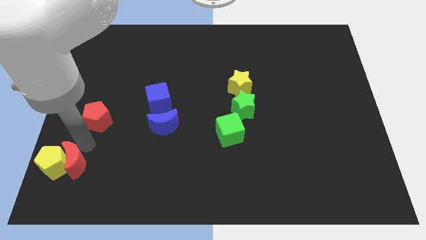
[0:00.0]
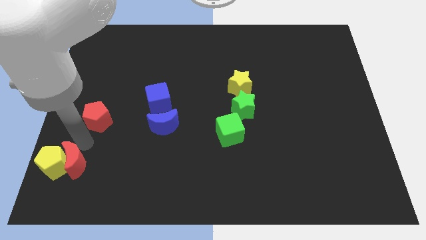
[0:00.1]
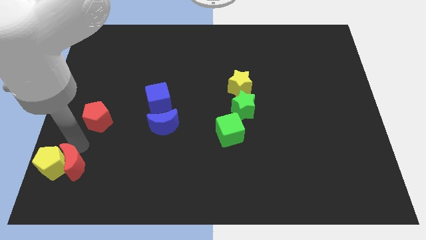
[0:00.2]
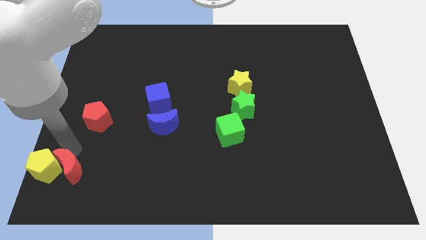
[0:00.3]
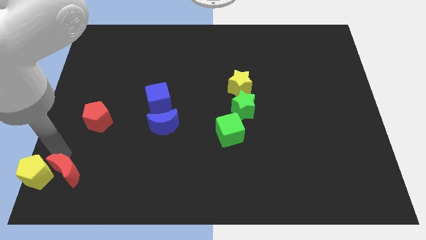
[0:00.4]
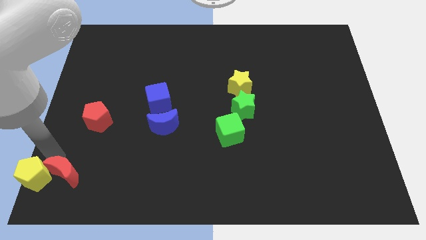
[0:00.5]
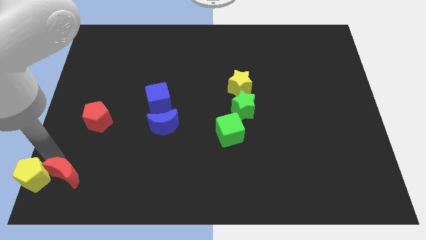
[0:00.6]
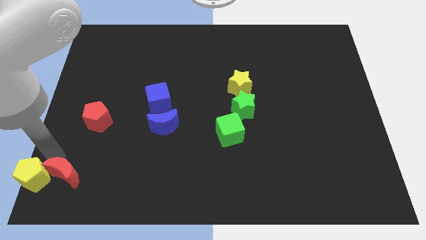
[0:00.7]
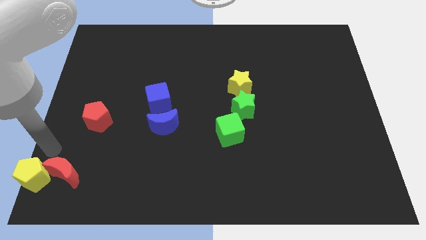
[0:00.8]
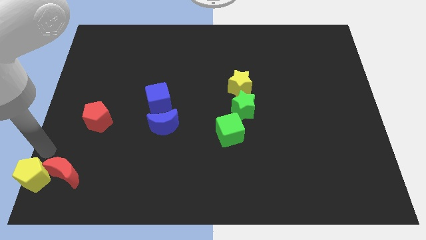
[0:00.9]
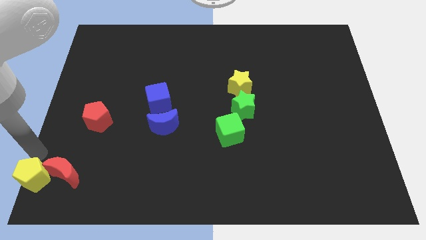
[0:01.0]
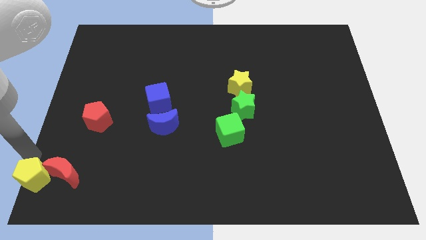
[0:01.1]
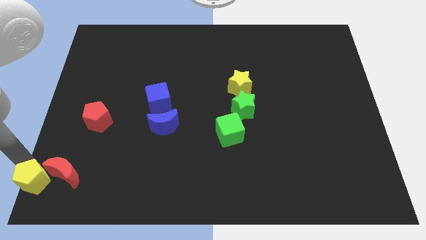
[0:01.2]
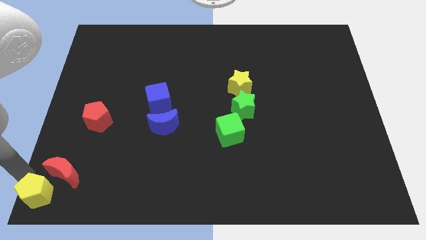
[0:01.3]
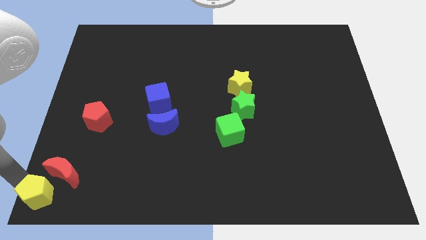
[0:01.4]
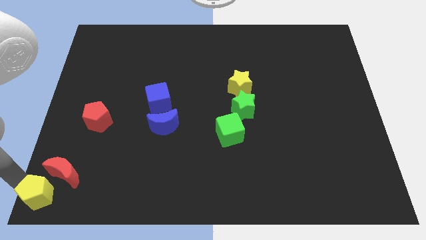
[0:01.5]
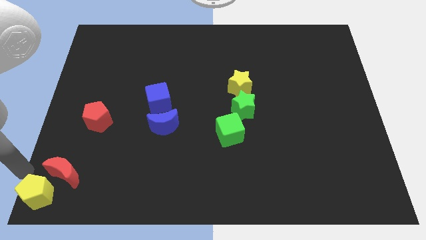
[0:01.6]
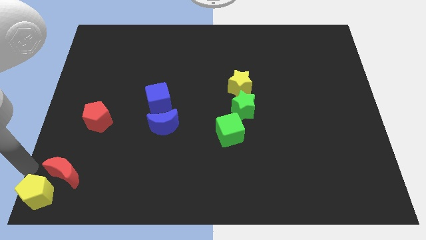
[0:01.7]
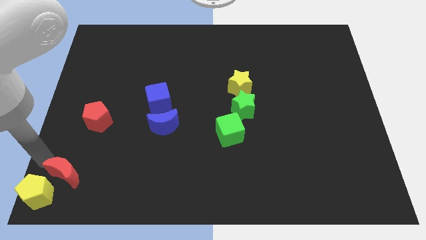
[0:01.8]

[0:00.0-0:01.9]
slide the yellow pentagon to the bottom left of the board

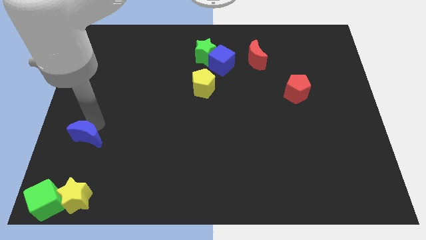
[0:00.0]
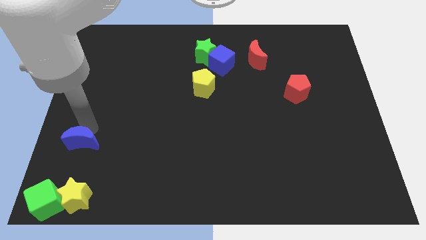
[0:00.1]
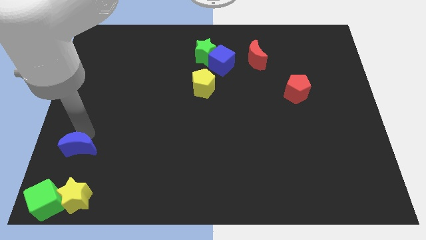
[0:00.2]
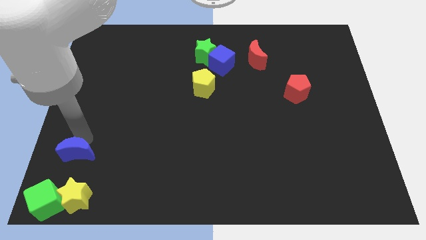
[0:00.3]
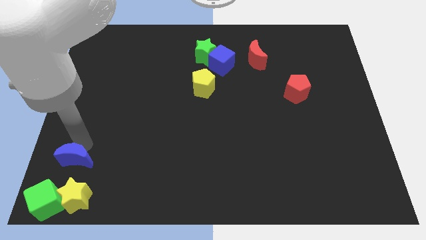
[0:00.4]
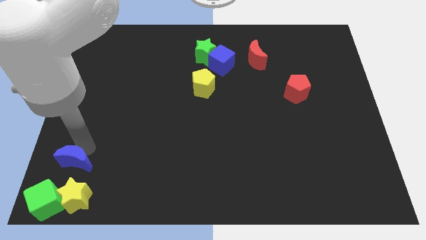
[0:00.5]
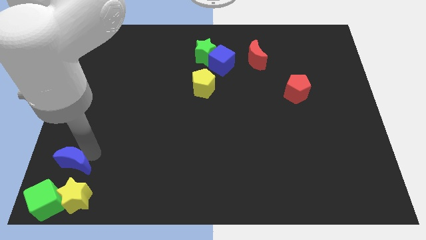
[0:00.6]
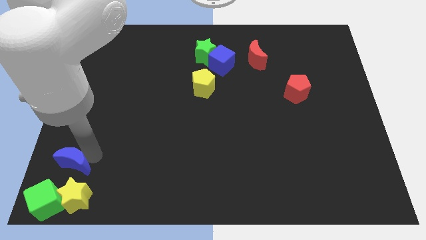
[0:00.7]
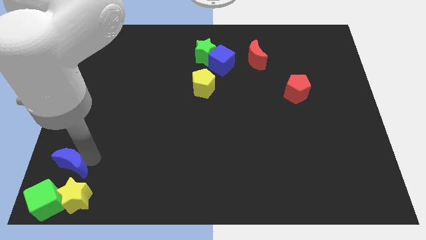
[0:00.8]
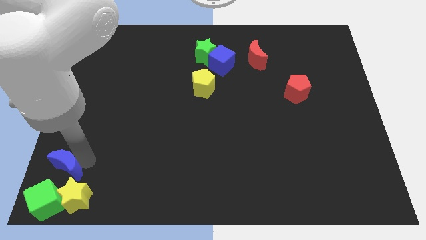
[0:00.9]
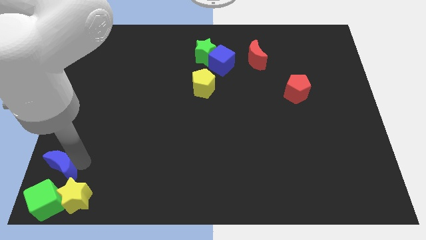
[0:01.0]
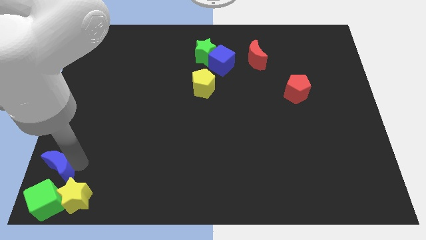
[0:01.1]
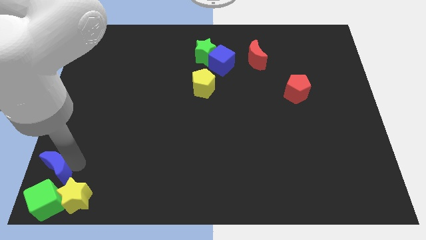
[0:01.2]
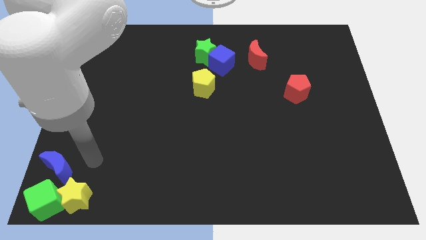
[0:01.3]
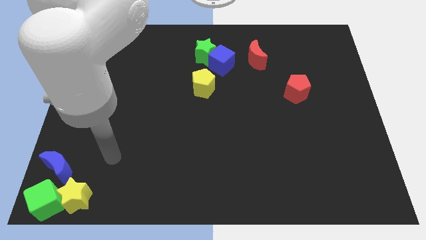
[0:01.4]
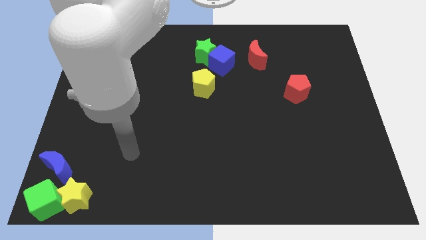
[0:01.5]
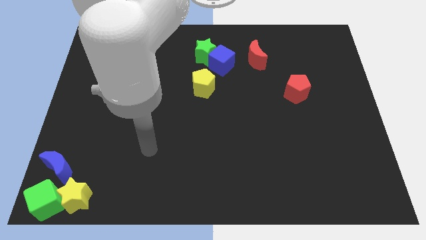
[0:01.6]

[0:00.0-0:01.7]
slide the blue moon towards the green cube

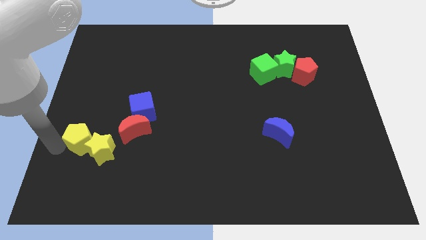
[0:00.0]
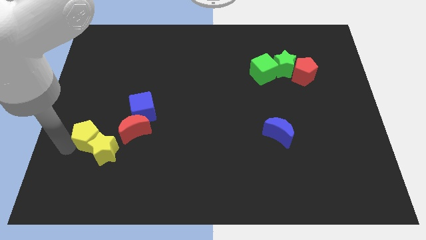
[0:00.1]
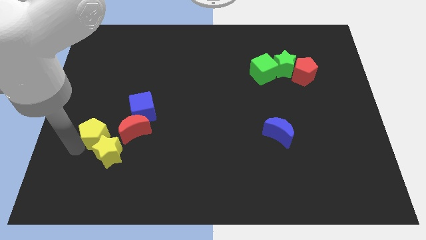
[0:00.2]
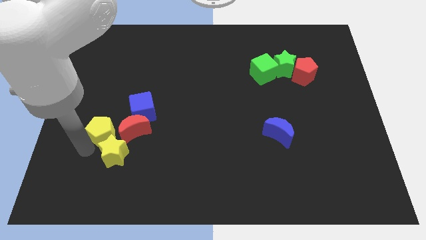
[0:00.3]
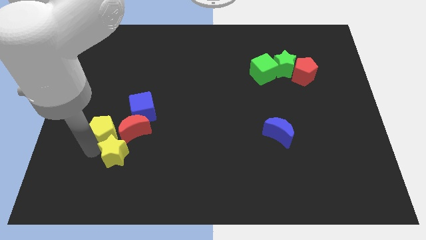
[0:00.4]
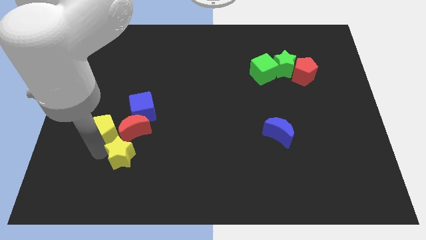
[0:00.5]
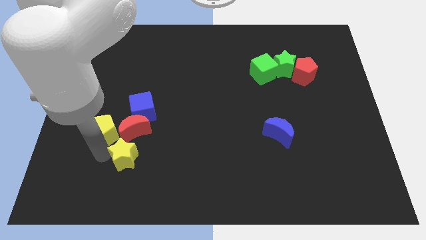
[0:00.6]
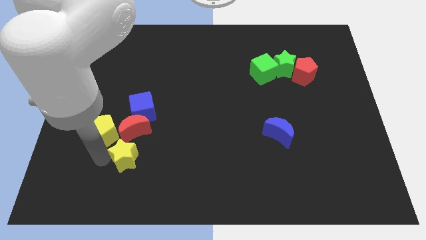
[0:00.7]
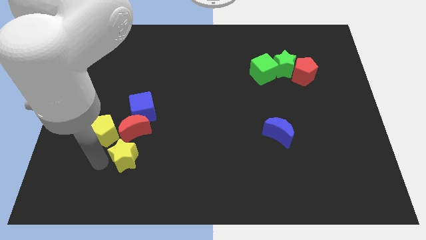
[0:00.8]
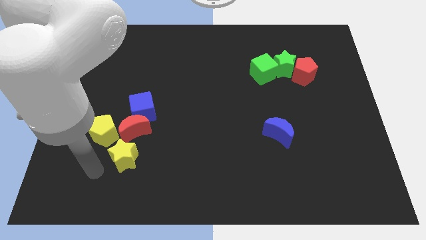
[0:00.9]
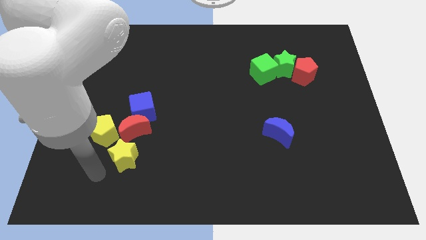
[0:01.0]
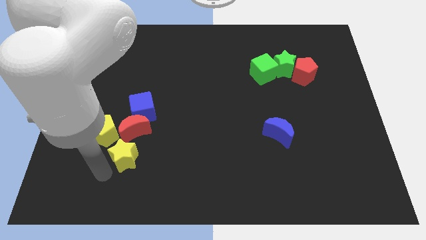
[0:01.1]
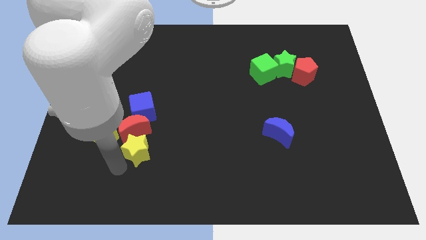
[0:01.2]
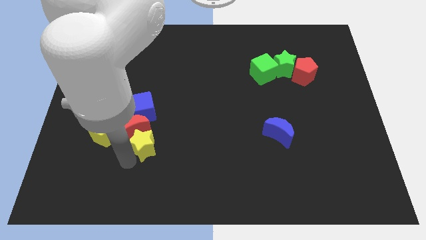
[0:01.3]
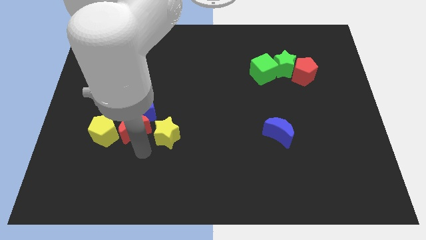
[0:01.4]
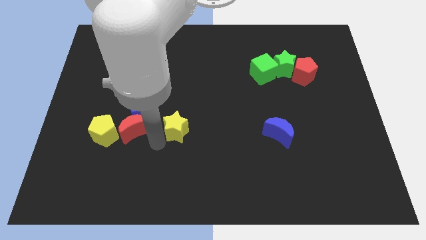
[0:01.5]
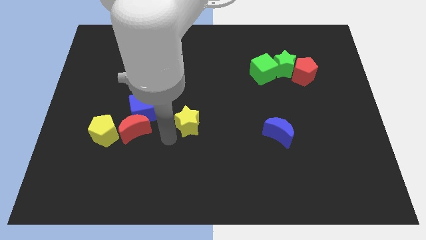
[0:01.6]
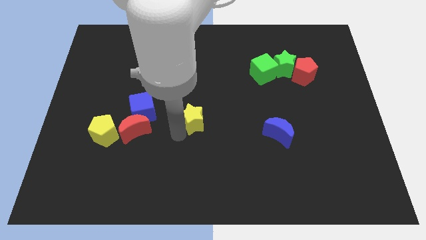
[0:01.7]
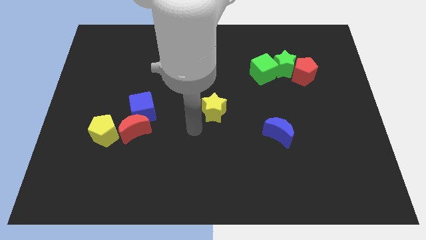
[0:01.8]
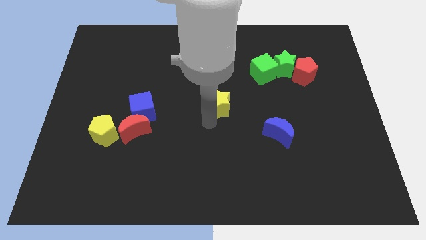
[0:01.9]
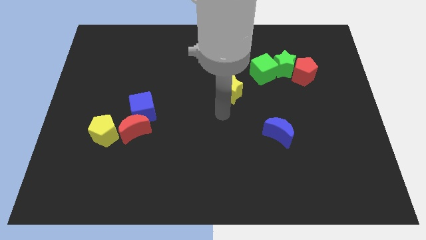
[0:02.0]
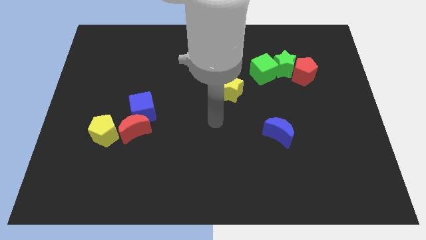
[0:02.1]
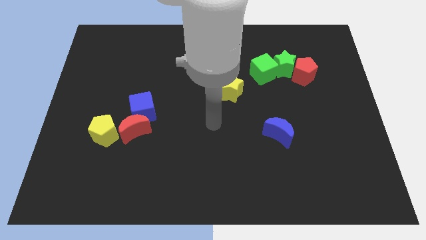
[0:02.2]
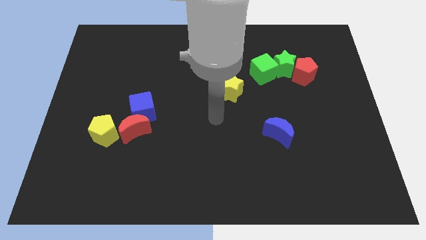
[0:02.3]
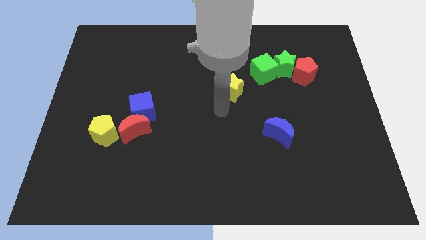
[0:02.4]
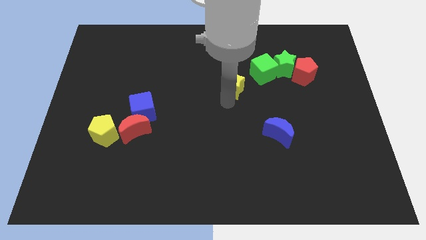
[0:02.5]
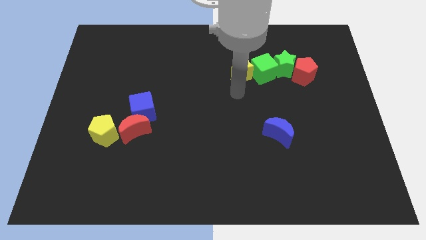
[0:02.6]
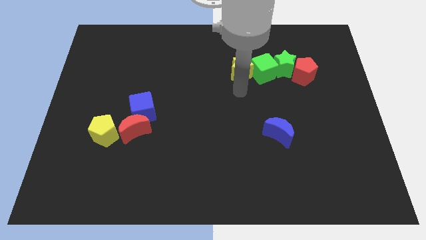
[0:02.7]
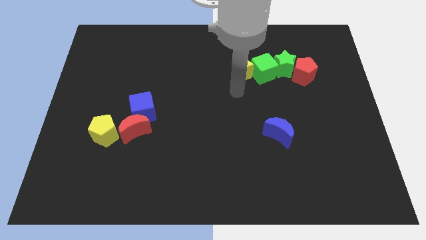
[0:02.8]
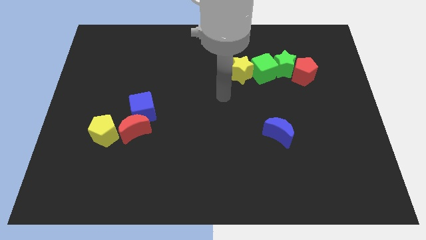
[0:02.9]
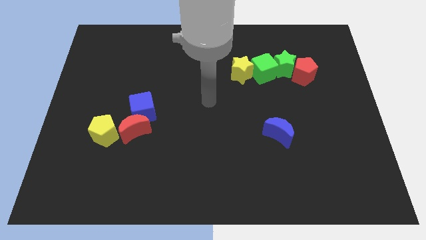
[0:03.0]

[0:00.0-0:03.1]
move the yellow star to the left of the green cube

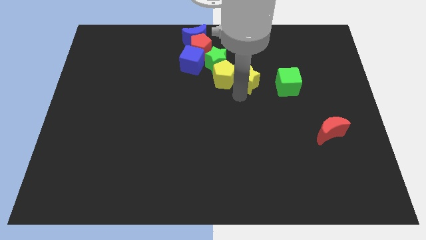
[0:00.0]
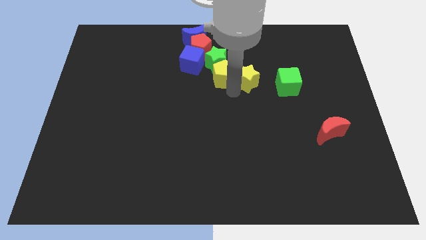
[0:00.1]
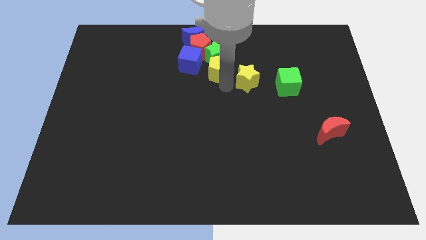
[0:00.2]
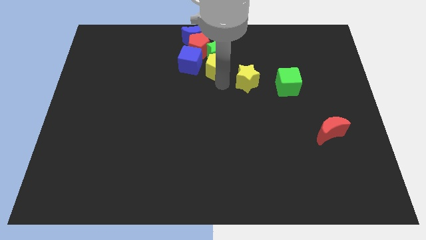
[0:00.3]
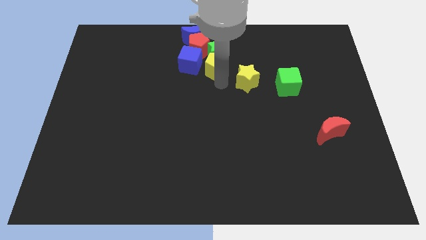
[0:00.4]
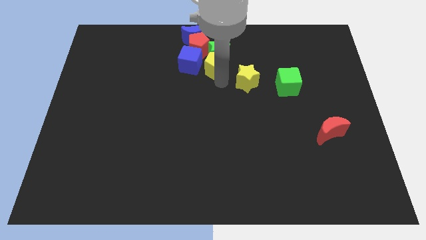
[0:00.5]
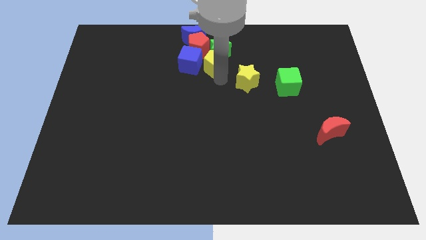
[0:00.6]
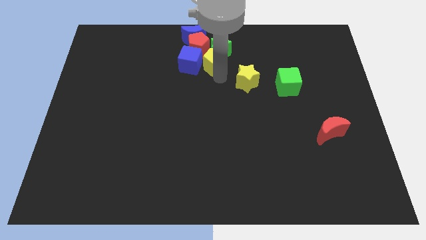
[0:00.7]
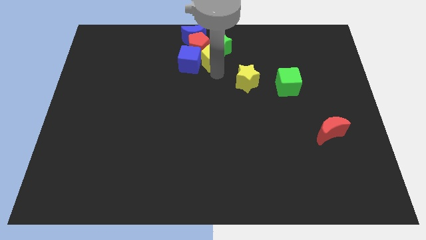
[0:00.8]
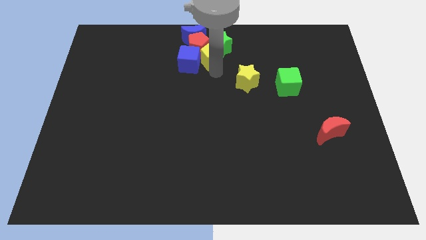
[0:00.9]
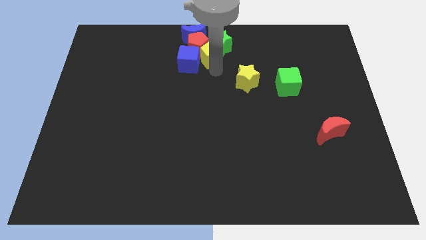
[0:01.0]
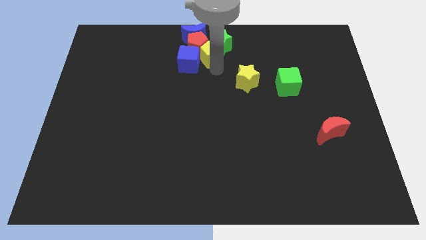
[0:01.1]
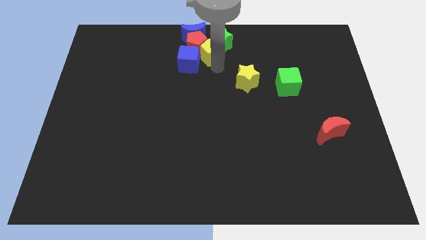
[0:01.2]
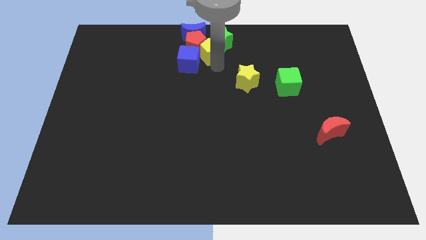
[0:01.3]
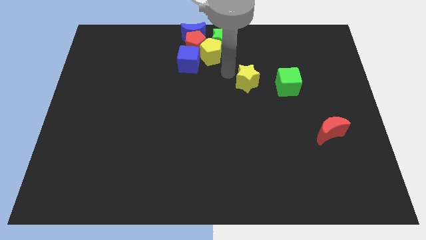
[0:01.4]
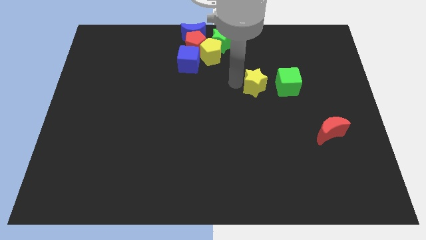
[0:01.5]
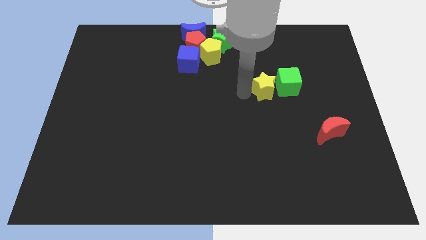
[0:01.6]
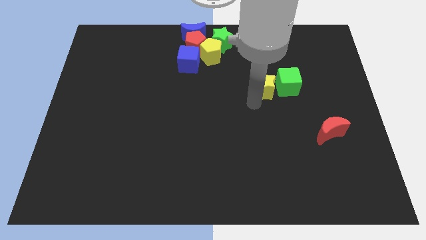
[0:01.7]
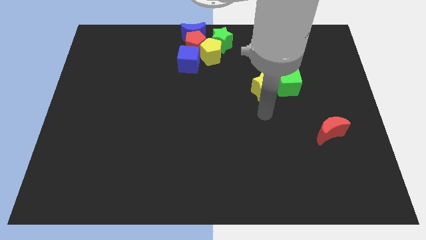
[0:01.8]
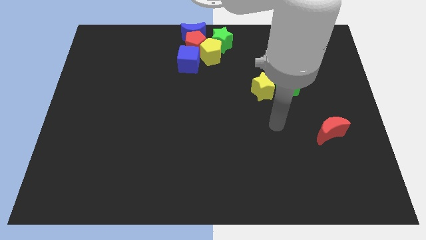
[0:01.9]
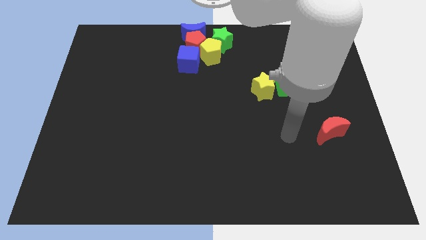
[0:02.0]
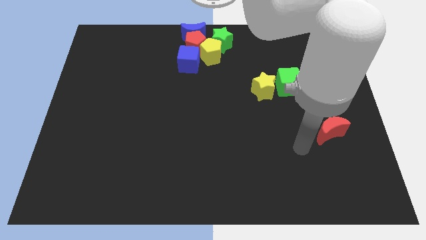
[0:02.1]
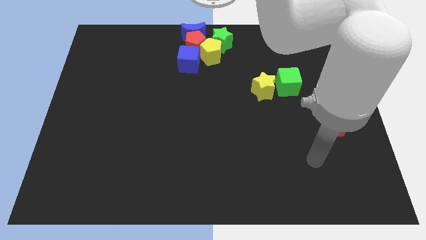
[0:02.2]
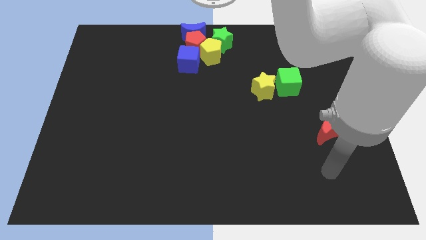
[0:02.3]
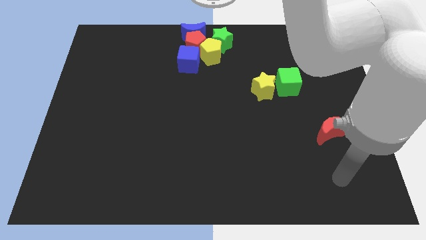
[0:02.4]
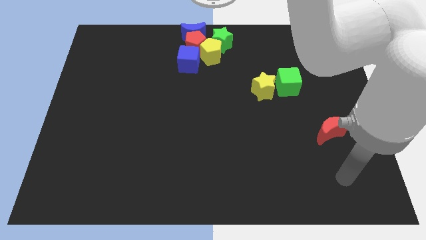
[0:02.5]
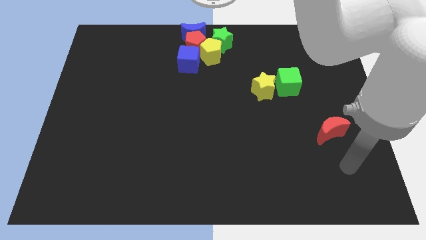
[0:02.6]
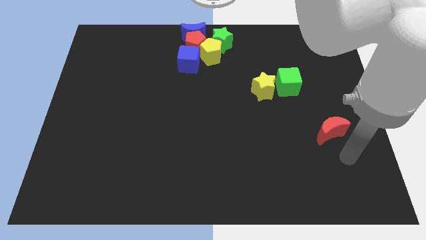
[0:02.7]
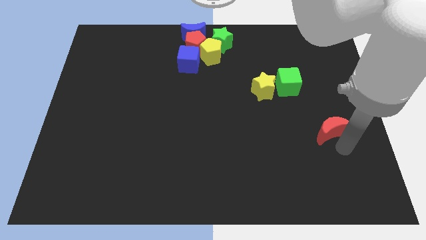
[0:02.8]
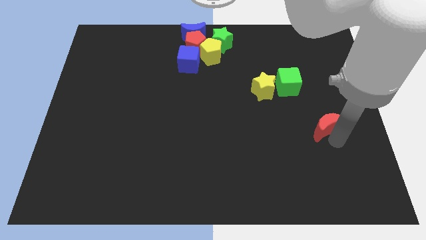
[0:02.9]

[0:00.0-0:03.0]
point your arm below red moon
